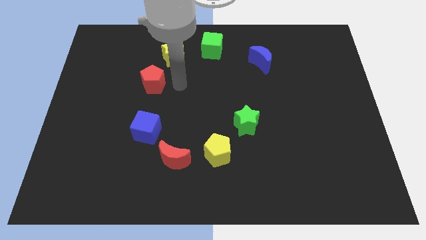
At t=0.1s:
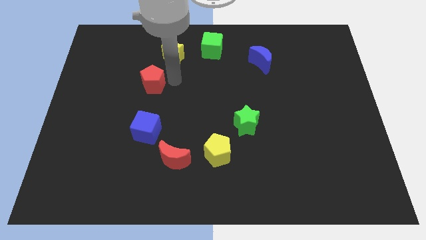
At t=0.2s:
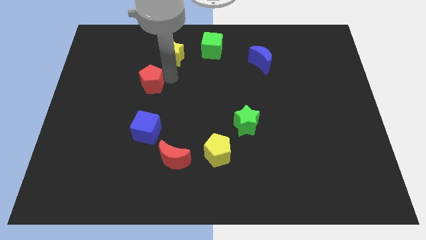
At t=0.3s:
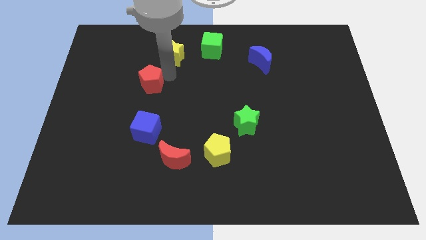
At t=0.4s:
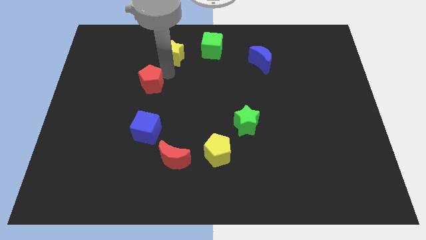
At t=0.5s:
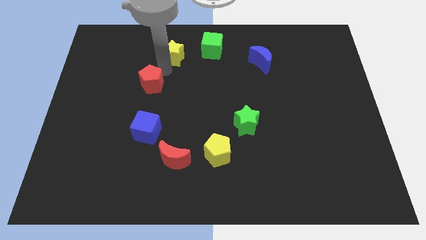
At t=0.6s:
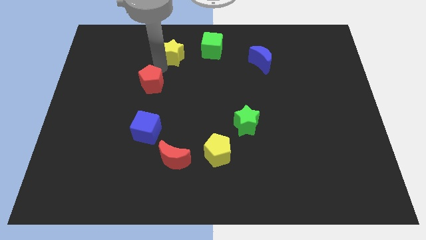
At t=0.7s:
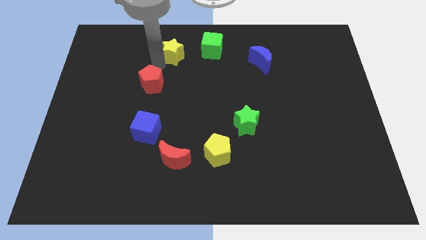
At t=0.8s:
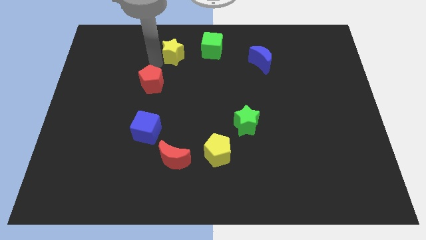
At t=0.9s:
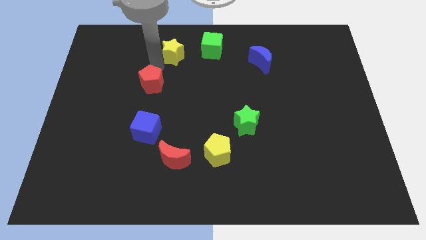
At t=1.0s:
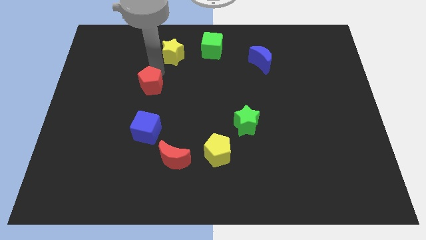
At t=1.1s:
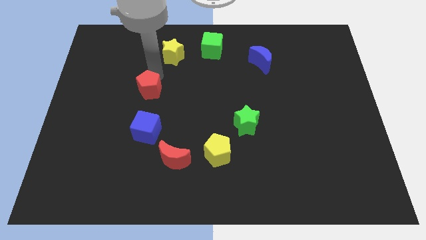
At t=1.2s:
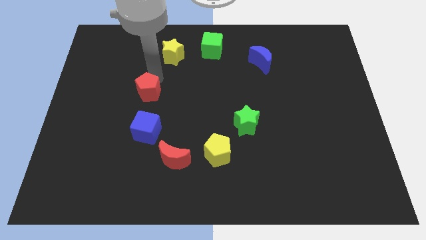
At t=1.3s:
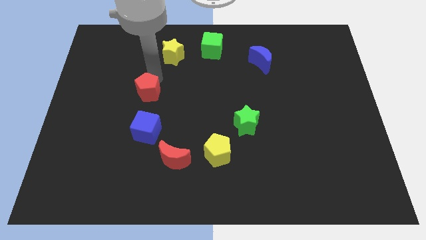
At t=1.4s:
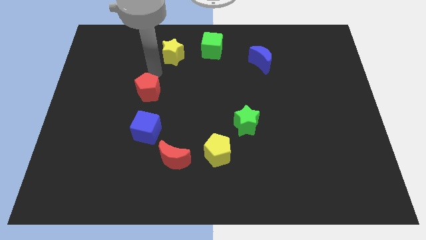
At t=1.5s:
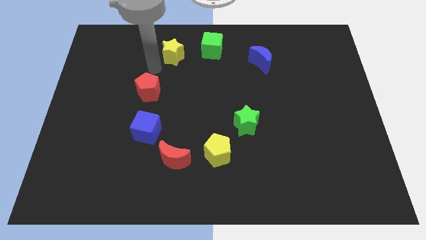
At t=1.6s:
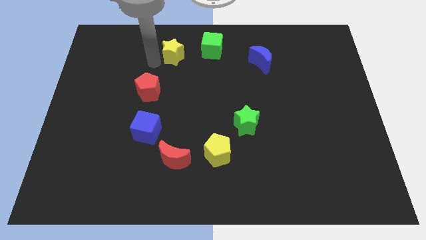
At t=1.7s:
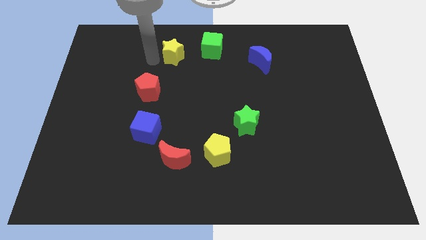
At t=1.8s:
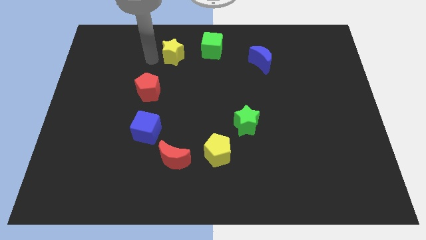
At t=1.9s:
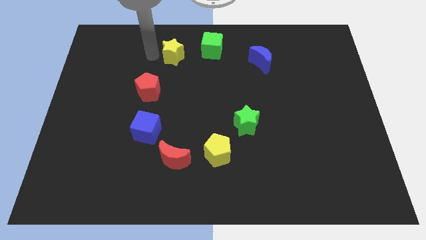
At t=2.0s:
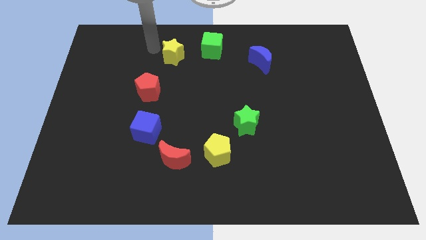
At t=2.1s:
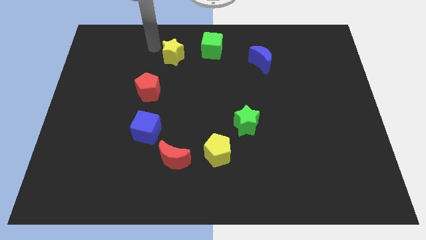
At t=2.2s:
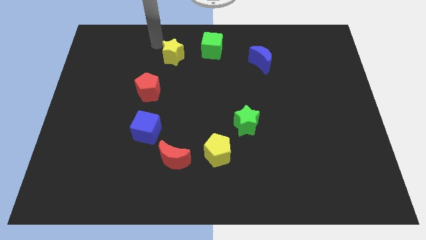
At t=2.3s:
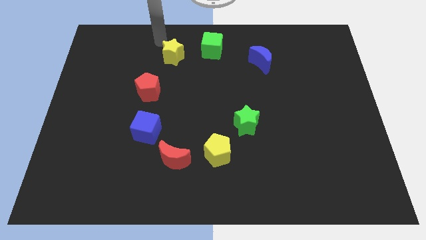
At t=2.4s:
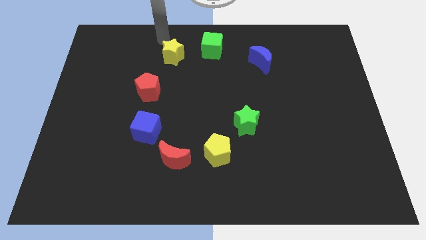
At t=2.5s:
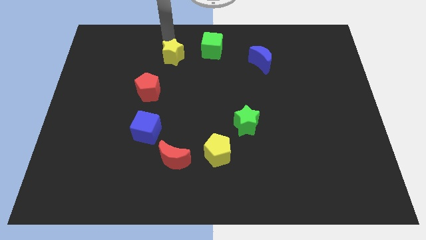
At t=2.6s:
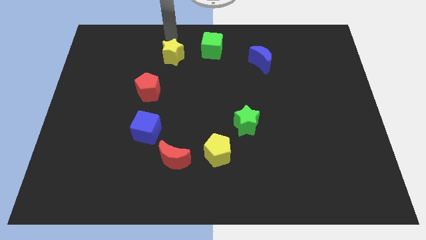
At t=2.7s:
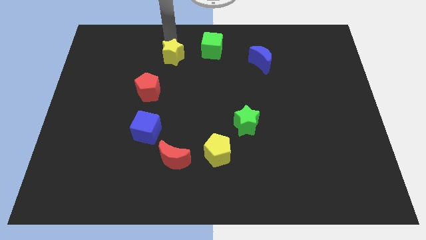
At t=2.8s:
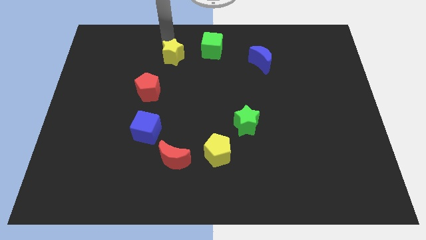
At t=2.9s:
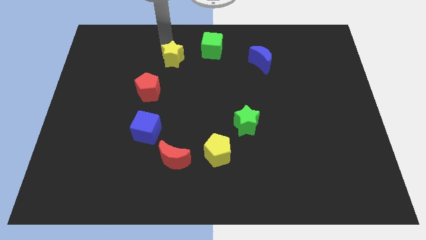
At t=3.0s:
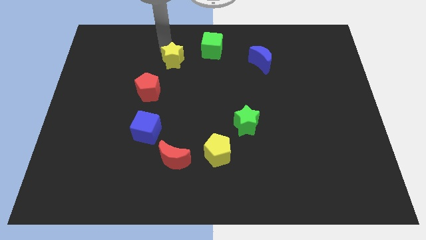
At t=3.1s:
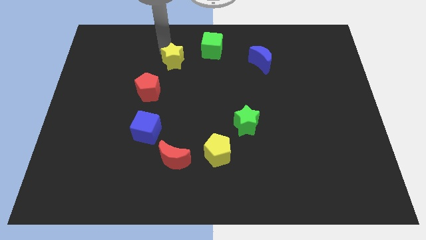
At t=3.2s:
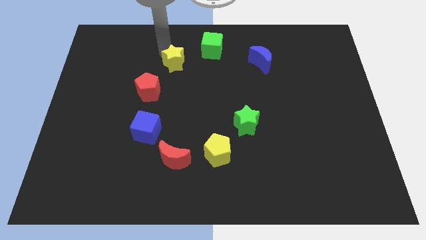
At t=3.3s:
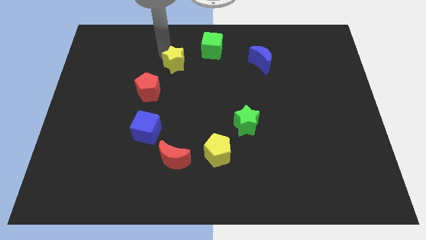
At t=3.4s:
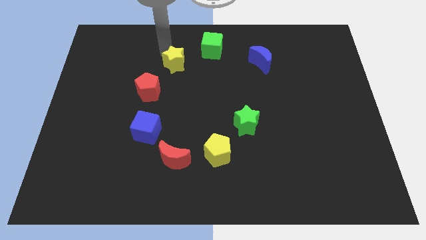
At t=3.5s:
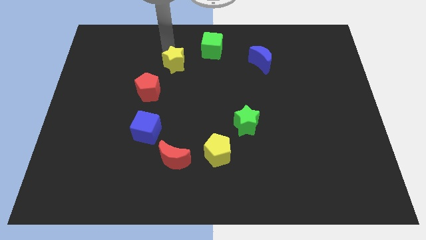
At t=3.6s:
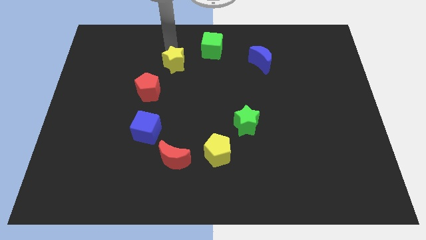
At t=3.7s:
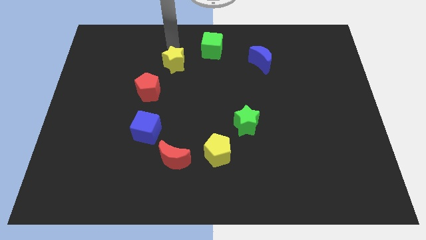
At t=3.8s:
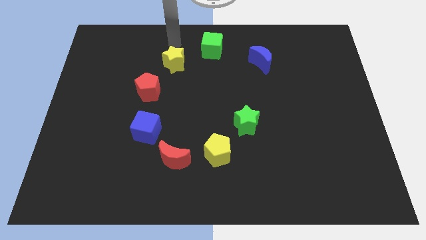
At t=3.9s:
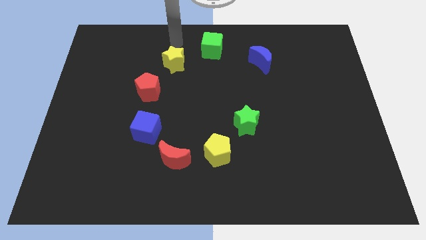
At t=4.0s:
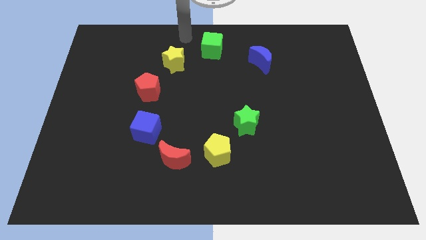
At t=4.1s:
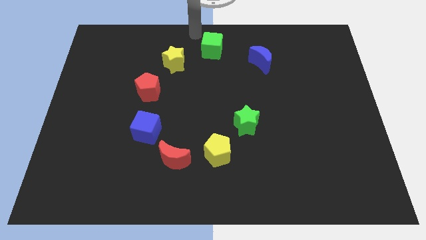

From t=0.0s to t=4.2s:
adjust the red pentagon

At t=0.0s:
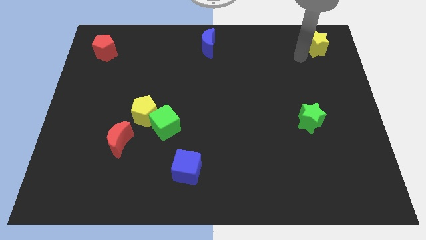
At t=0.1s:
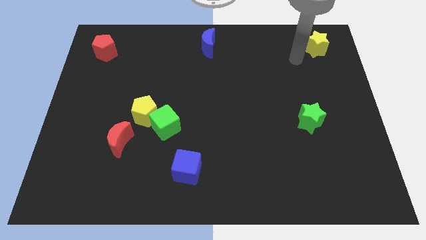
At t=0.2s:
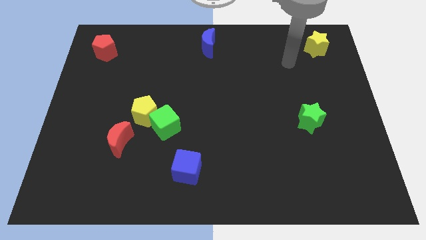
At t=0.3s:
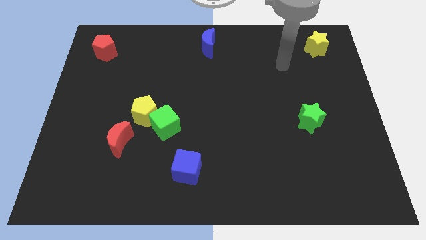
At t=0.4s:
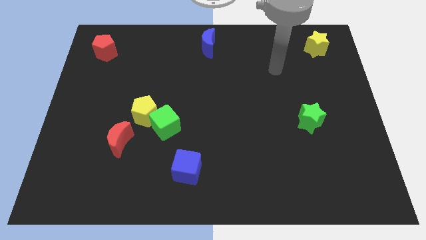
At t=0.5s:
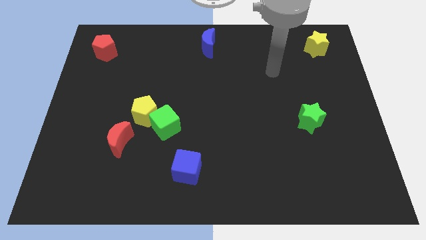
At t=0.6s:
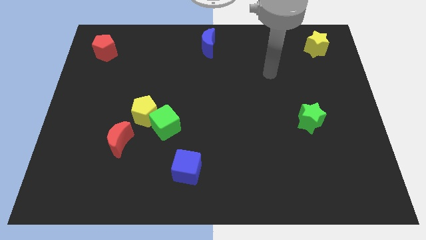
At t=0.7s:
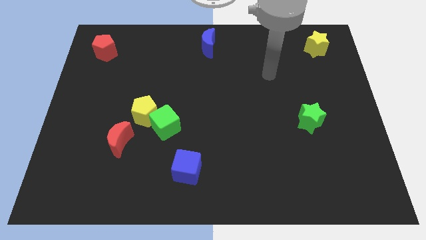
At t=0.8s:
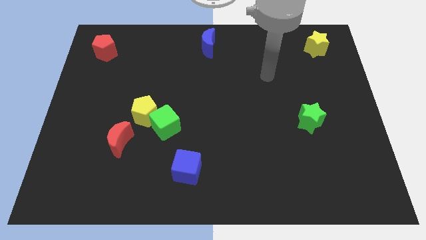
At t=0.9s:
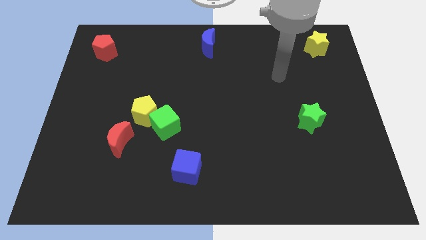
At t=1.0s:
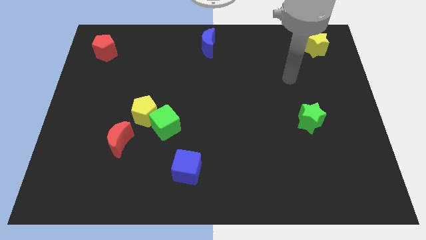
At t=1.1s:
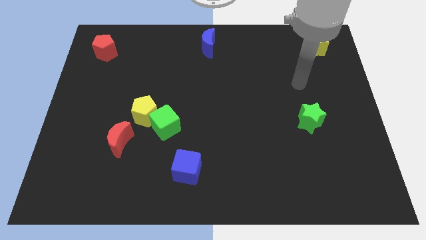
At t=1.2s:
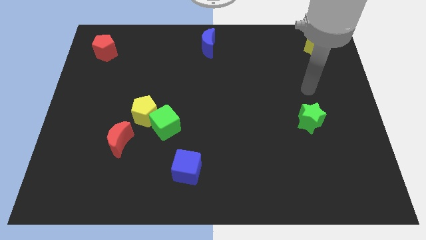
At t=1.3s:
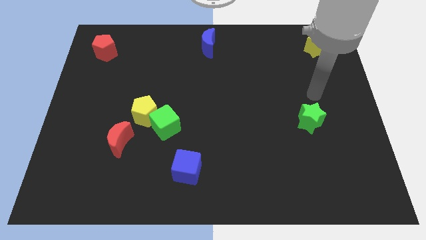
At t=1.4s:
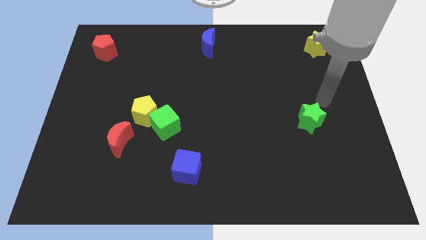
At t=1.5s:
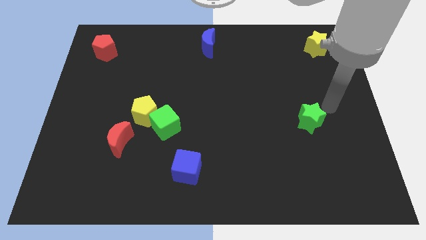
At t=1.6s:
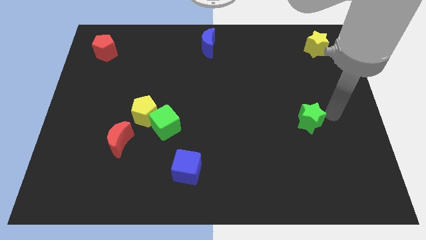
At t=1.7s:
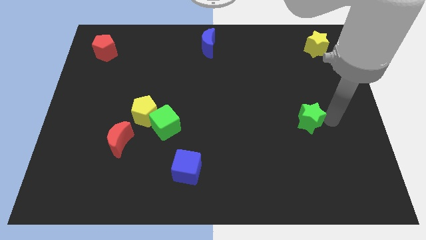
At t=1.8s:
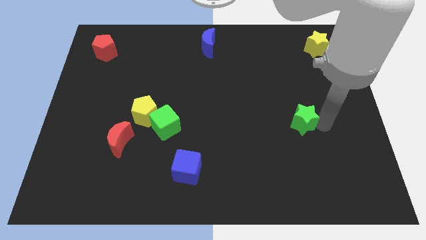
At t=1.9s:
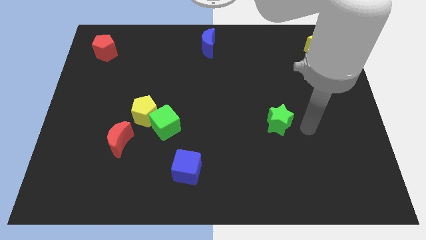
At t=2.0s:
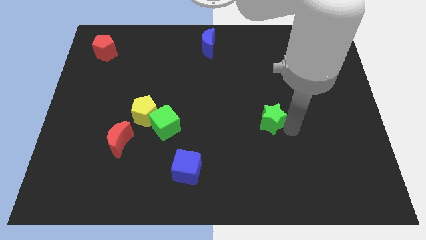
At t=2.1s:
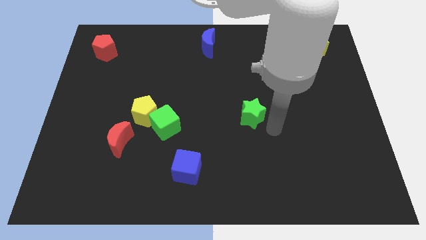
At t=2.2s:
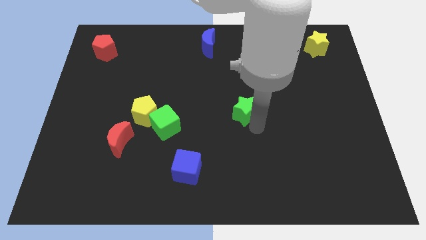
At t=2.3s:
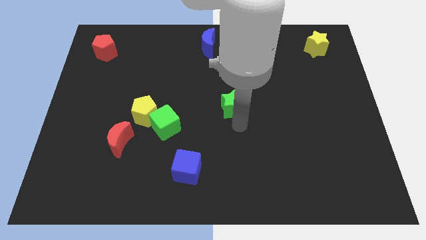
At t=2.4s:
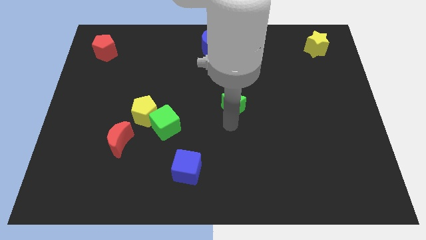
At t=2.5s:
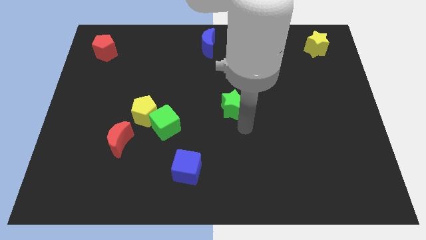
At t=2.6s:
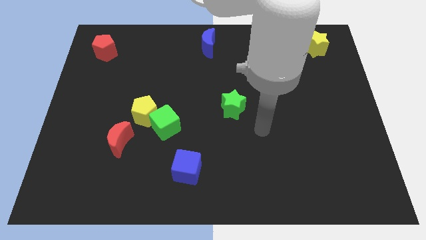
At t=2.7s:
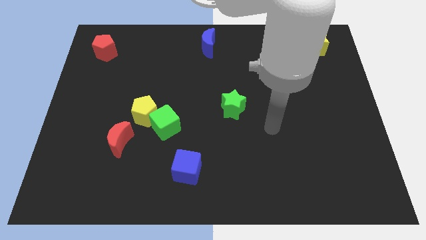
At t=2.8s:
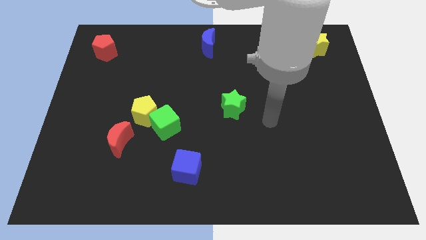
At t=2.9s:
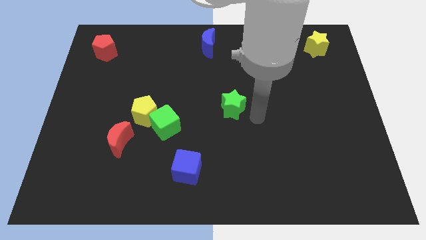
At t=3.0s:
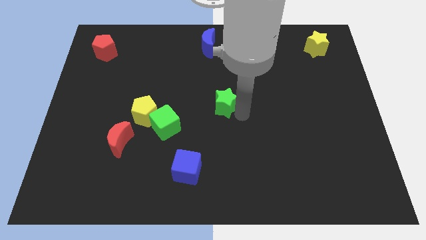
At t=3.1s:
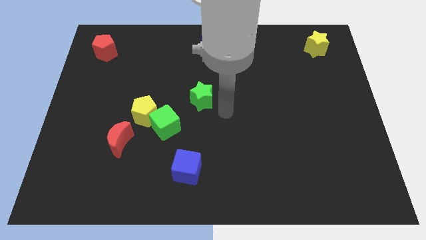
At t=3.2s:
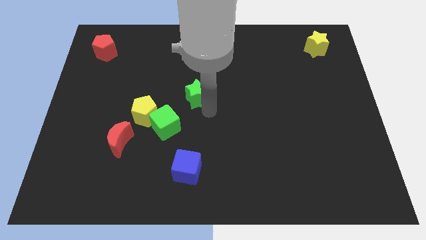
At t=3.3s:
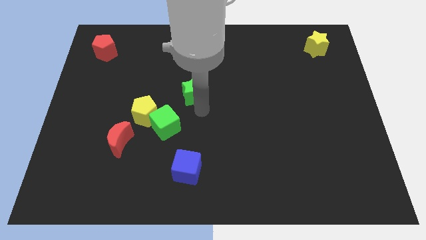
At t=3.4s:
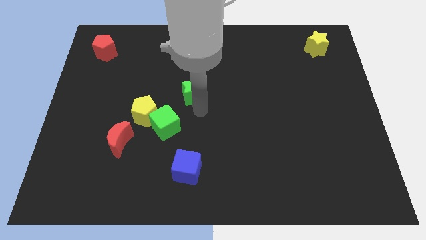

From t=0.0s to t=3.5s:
drag the green star to the left

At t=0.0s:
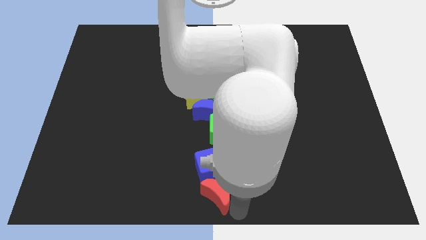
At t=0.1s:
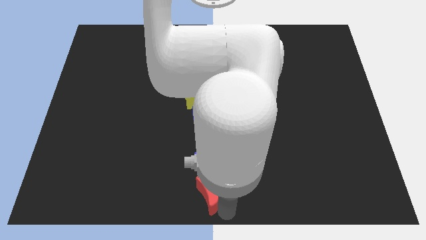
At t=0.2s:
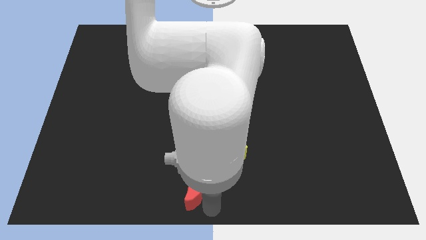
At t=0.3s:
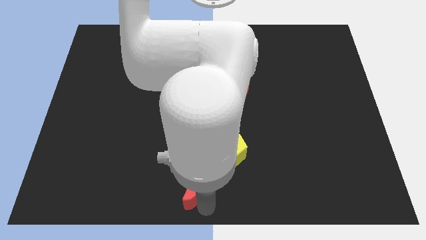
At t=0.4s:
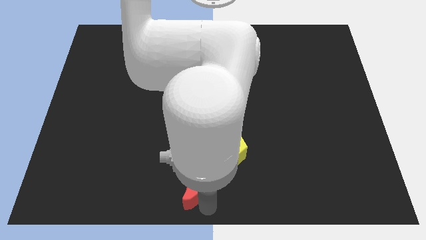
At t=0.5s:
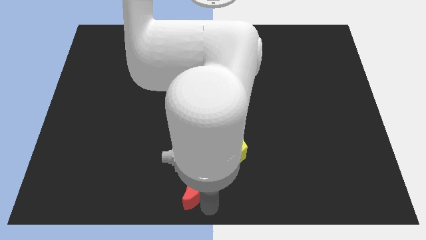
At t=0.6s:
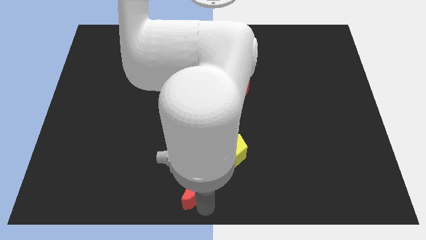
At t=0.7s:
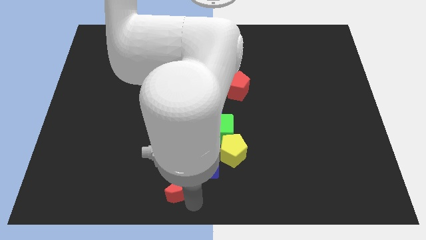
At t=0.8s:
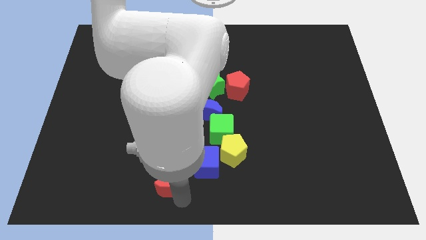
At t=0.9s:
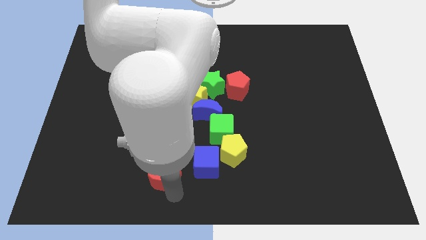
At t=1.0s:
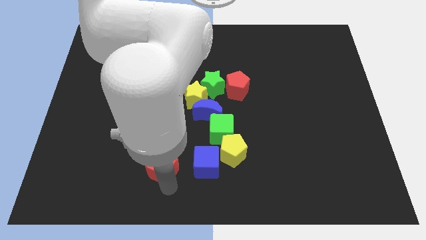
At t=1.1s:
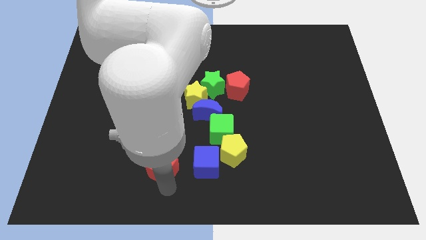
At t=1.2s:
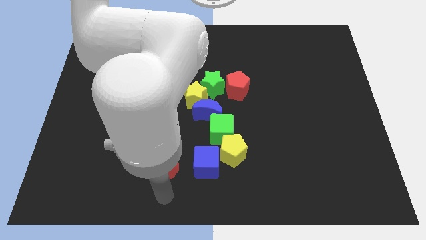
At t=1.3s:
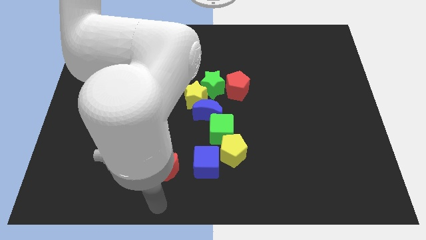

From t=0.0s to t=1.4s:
put the red crescent on the left side of the blue cube

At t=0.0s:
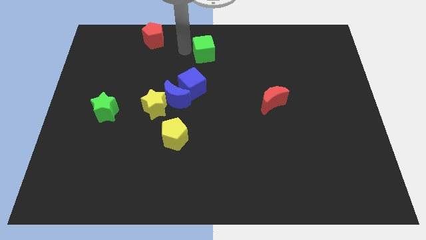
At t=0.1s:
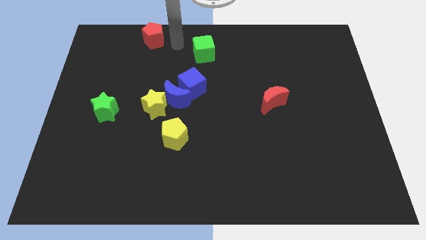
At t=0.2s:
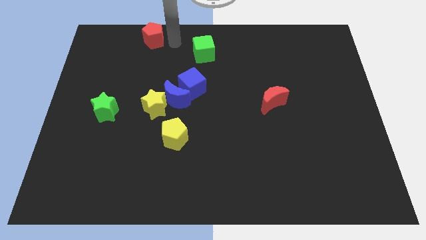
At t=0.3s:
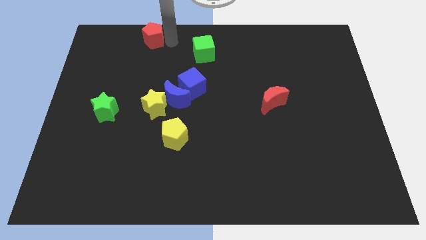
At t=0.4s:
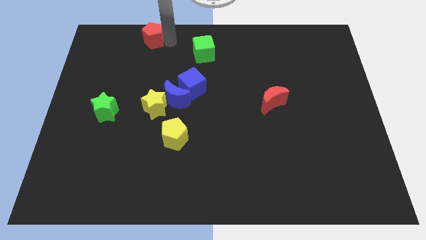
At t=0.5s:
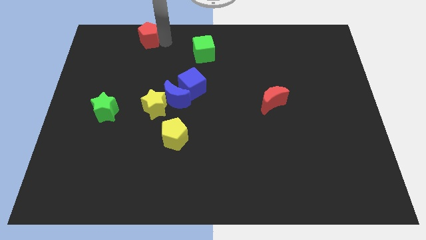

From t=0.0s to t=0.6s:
tap the red pentagon
